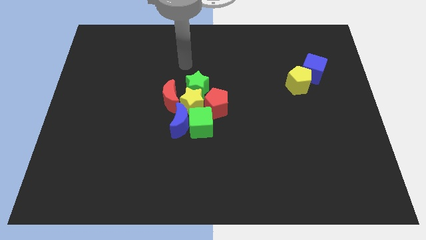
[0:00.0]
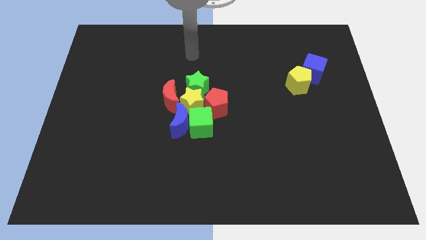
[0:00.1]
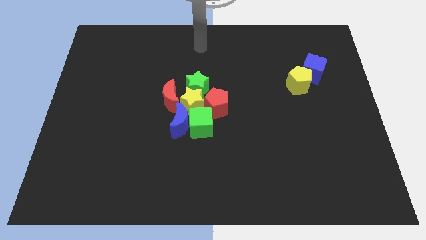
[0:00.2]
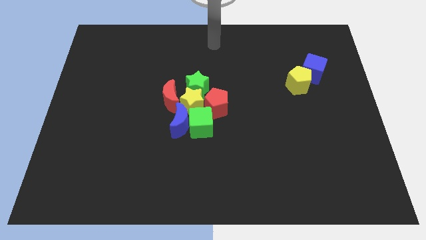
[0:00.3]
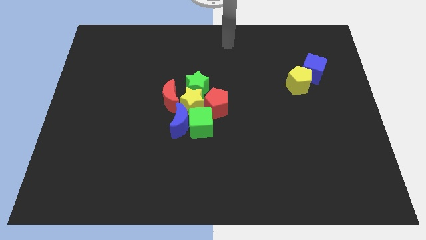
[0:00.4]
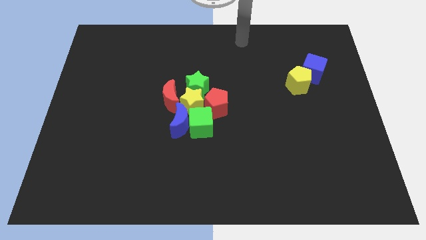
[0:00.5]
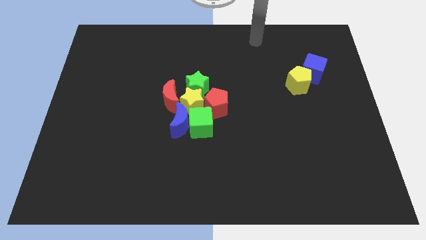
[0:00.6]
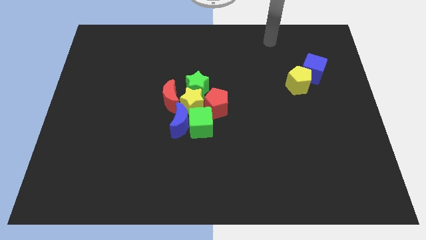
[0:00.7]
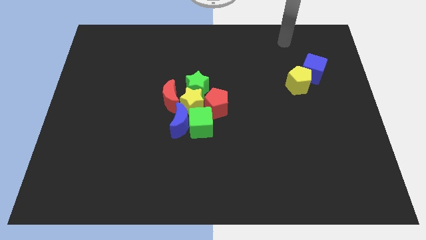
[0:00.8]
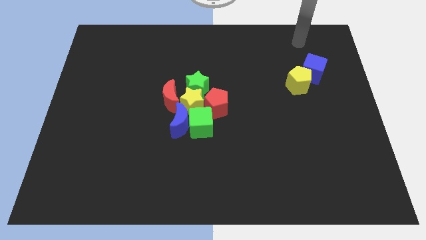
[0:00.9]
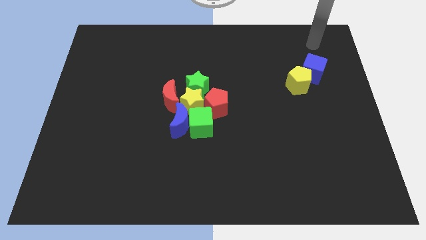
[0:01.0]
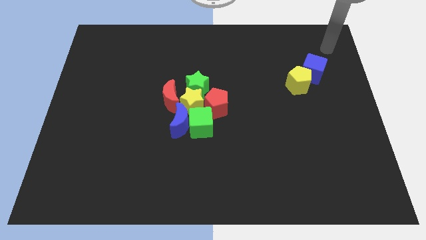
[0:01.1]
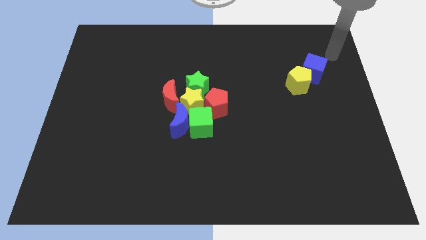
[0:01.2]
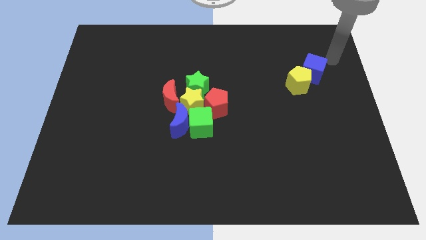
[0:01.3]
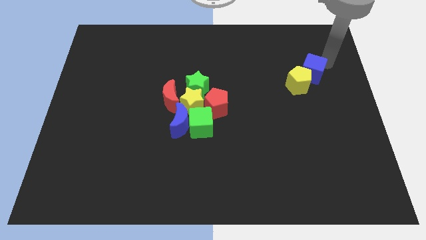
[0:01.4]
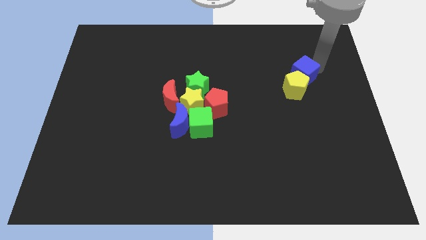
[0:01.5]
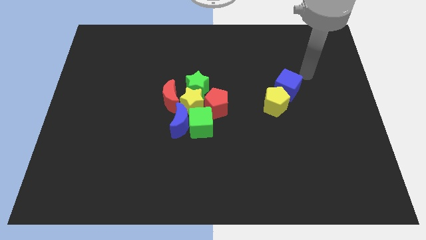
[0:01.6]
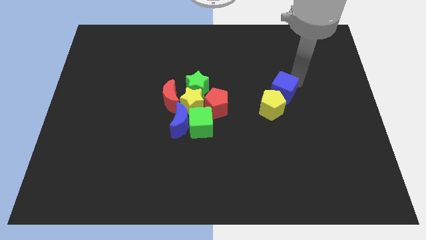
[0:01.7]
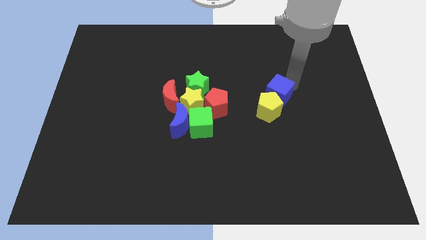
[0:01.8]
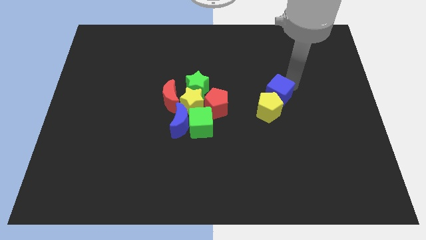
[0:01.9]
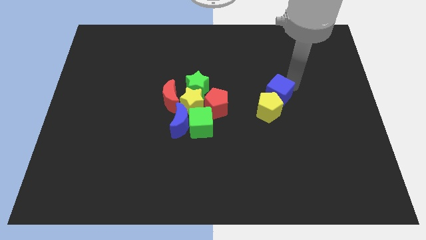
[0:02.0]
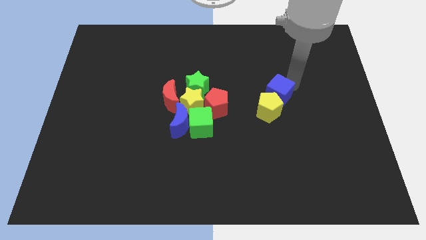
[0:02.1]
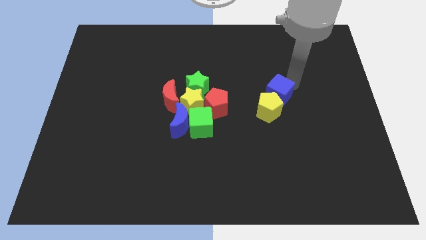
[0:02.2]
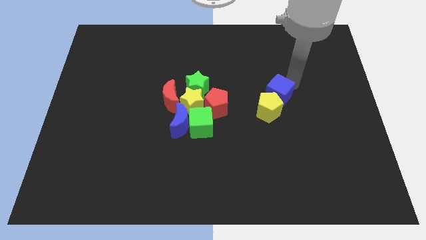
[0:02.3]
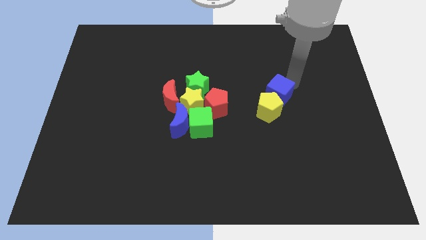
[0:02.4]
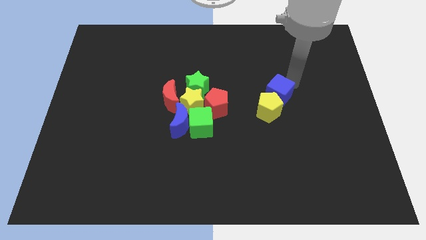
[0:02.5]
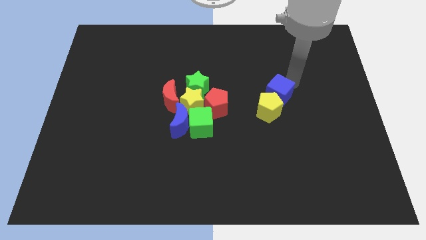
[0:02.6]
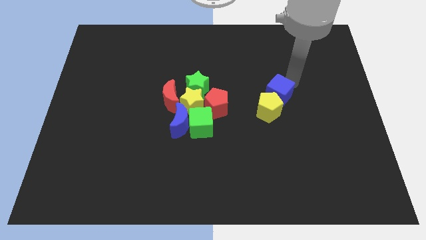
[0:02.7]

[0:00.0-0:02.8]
push the blue cube and yellow pentagon towards the bottom side of the board

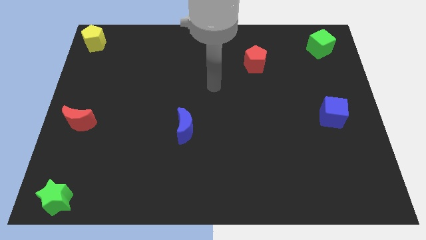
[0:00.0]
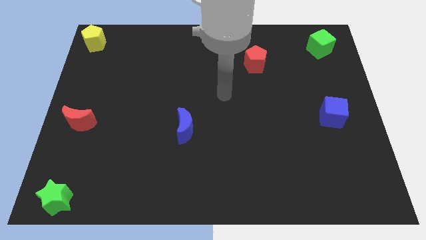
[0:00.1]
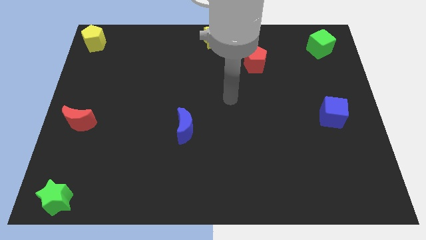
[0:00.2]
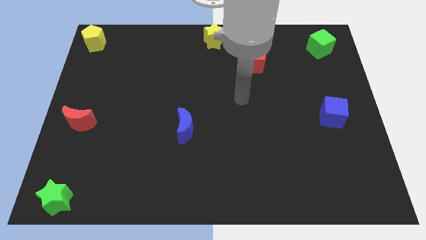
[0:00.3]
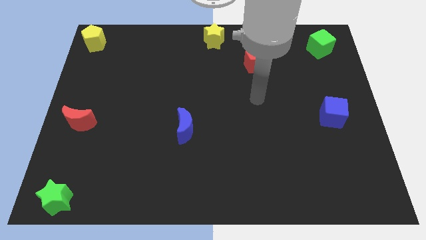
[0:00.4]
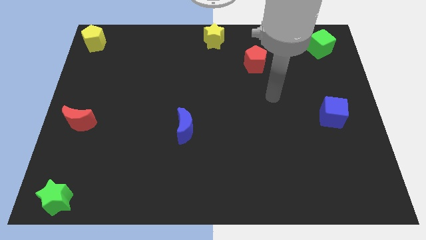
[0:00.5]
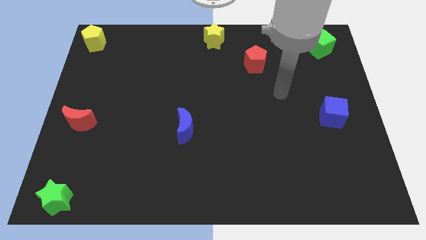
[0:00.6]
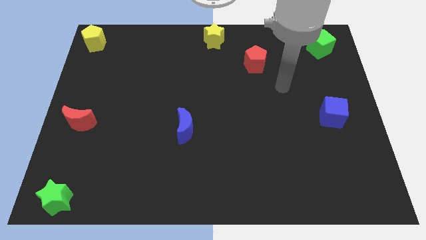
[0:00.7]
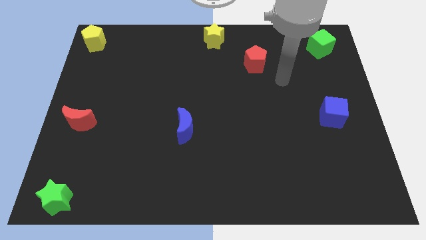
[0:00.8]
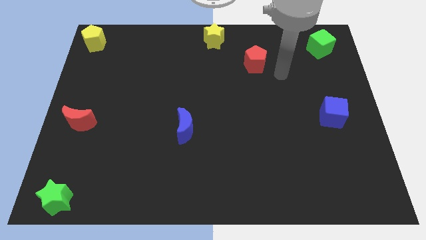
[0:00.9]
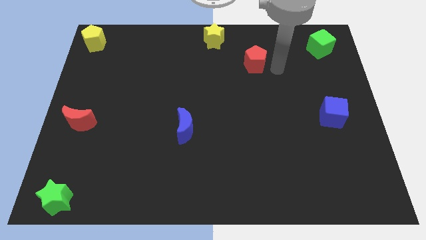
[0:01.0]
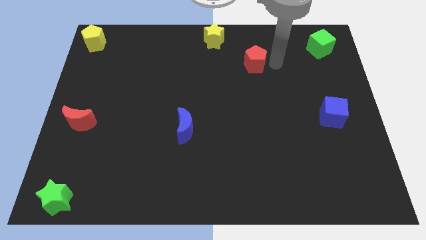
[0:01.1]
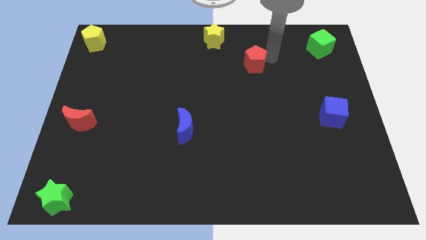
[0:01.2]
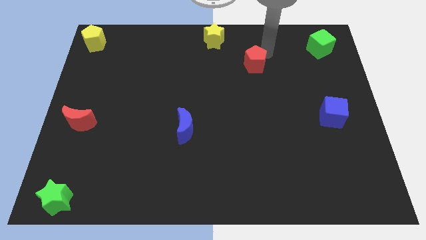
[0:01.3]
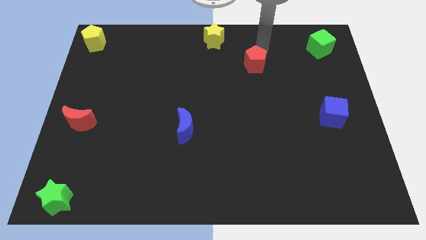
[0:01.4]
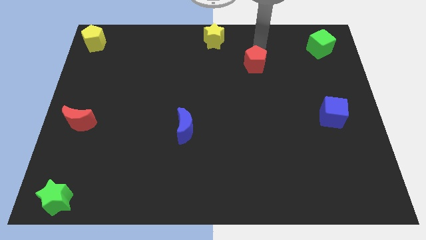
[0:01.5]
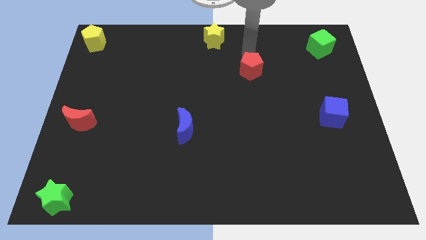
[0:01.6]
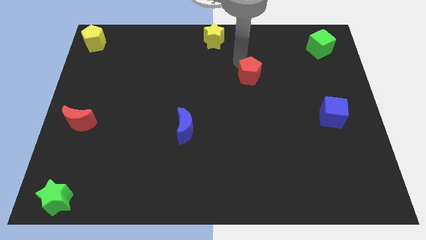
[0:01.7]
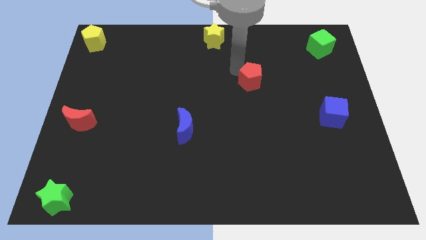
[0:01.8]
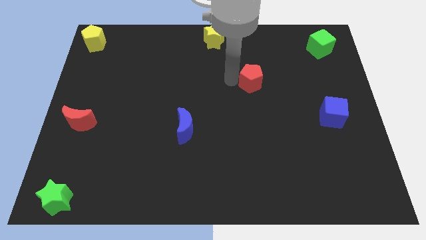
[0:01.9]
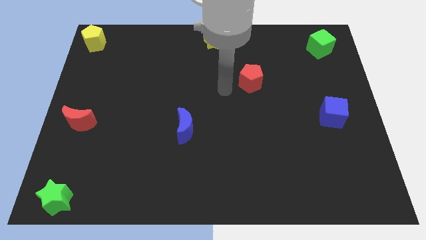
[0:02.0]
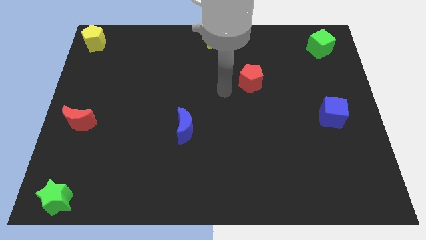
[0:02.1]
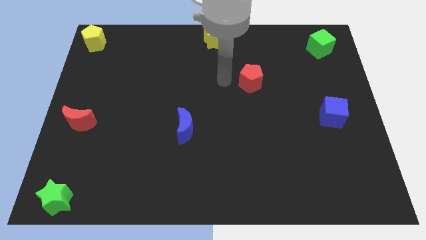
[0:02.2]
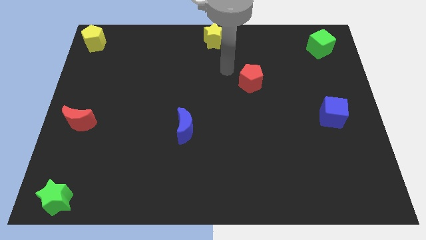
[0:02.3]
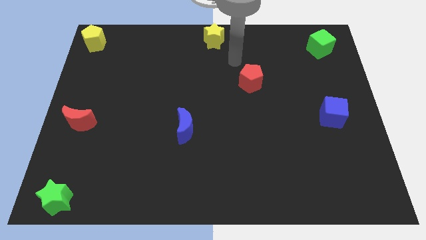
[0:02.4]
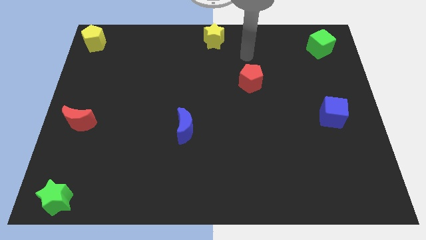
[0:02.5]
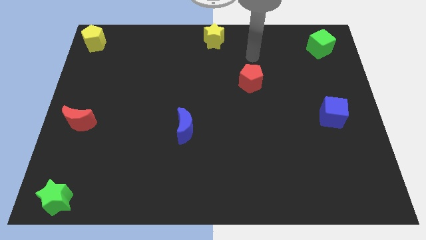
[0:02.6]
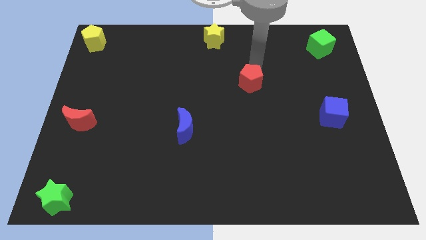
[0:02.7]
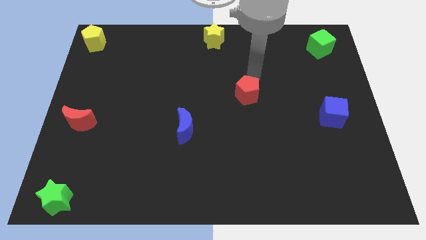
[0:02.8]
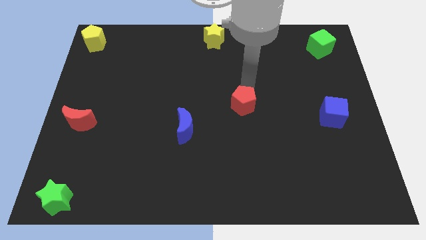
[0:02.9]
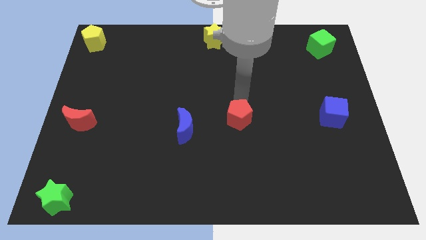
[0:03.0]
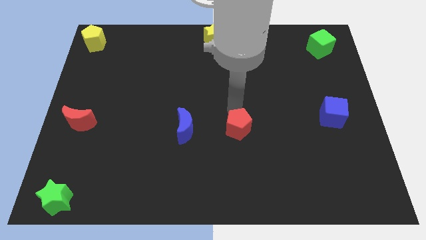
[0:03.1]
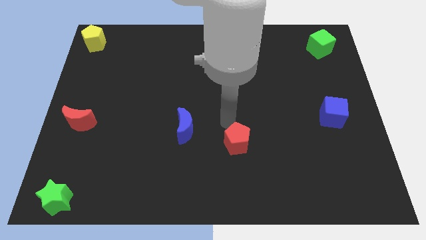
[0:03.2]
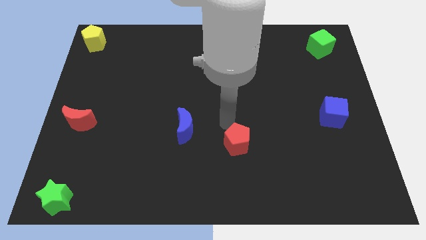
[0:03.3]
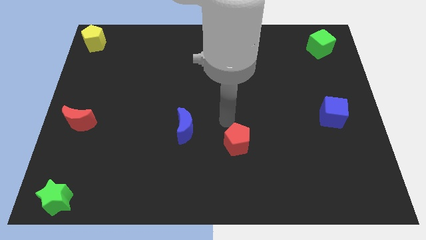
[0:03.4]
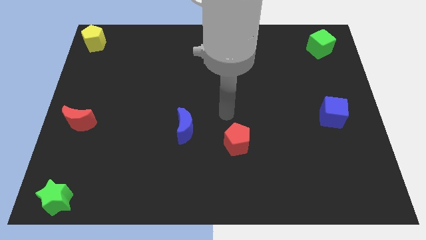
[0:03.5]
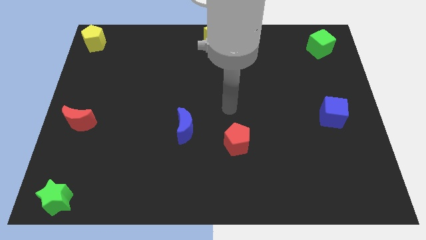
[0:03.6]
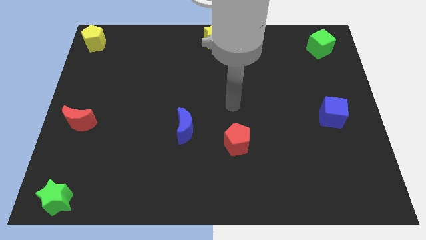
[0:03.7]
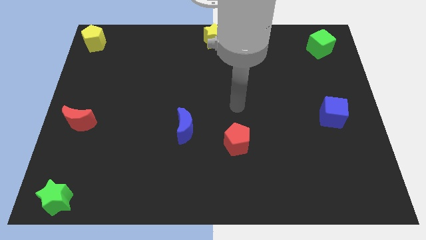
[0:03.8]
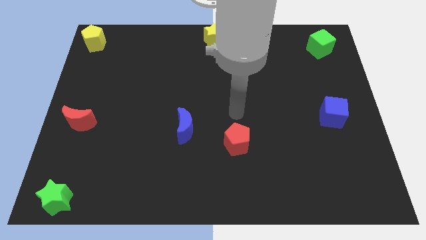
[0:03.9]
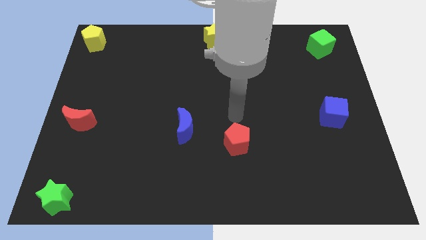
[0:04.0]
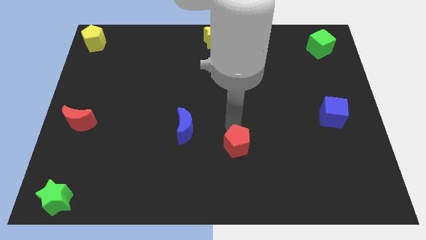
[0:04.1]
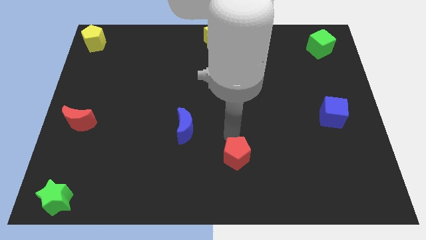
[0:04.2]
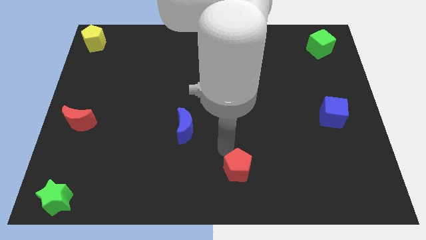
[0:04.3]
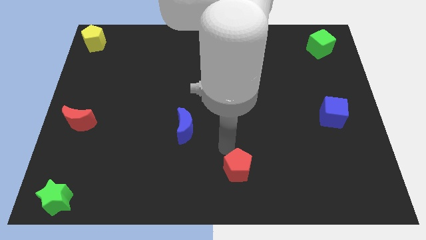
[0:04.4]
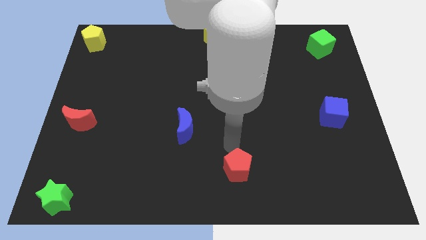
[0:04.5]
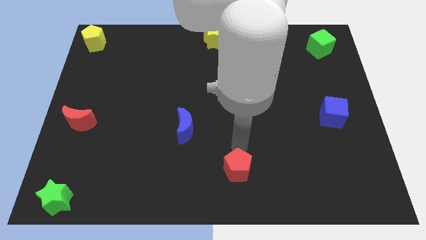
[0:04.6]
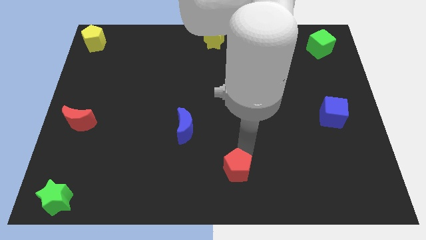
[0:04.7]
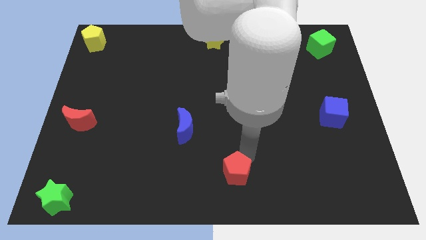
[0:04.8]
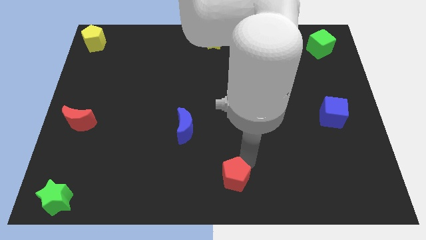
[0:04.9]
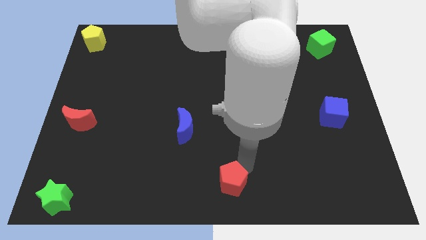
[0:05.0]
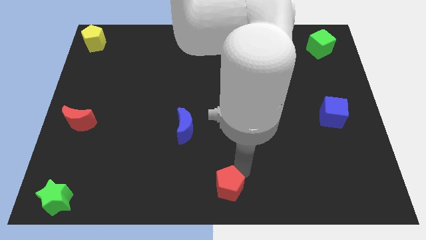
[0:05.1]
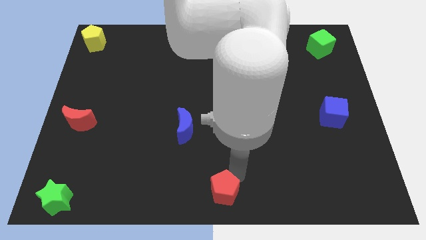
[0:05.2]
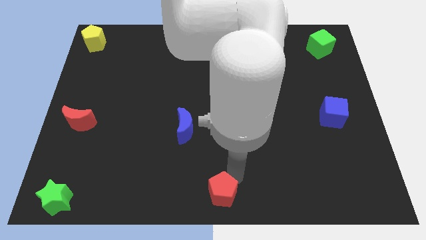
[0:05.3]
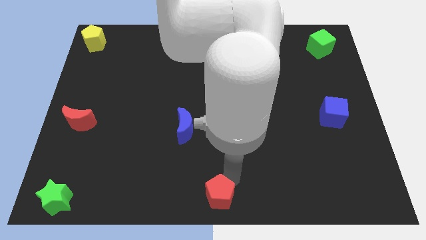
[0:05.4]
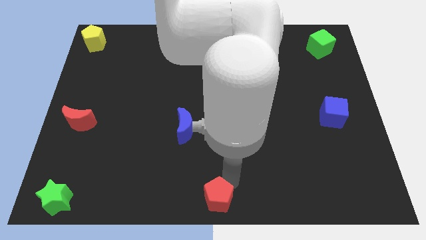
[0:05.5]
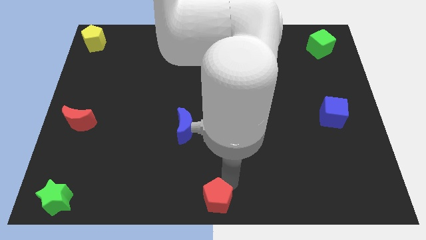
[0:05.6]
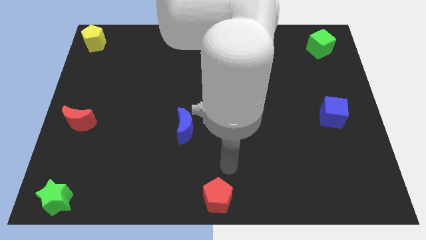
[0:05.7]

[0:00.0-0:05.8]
drag the red pentagon to the bottom center of the table

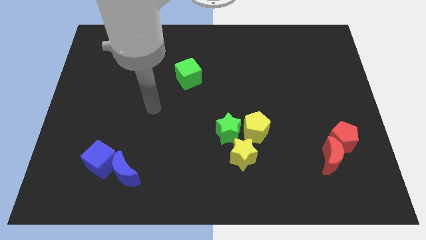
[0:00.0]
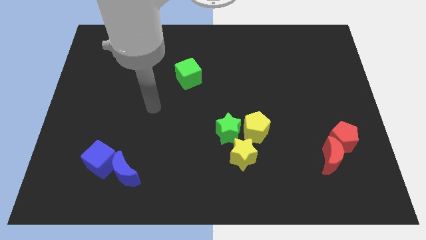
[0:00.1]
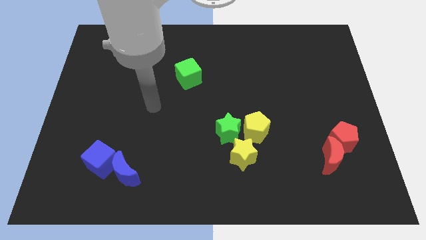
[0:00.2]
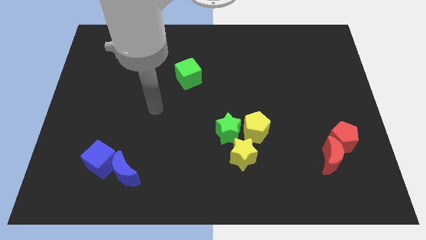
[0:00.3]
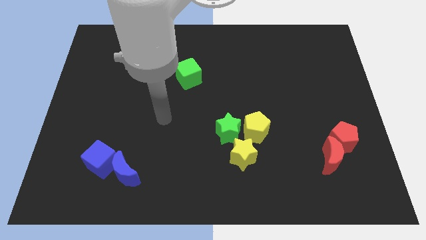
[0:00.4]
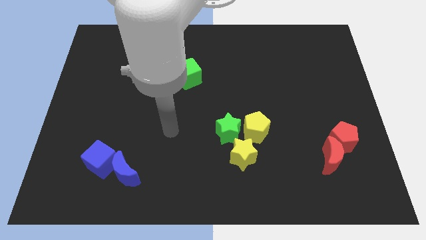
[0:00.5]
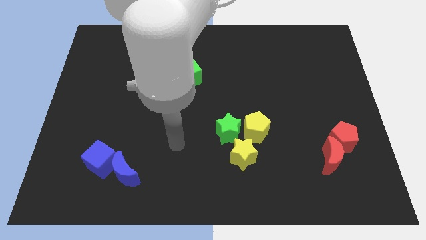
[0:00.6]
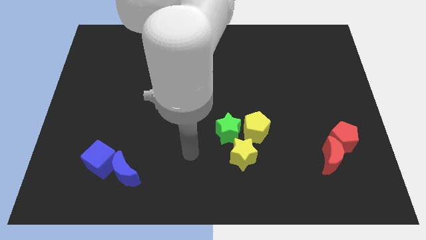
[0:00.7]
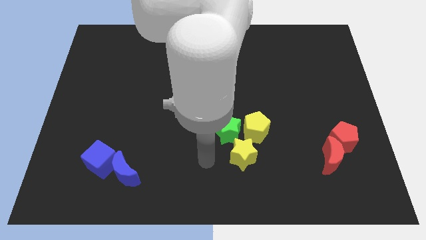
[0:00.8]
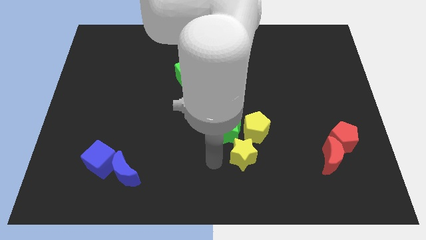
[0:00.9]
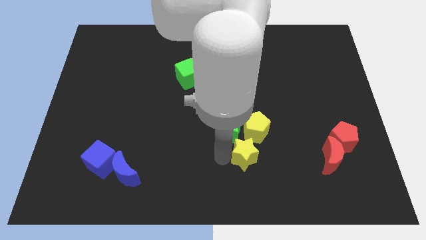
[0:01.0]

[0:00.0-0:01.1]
place the arm left to the yellow star
